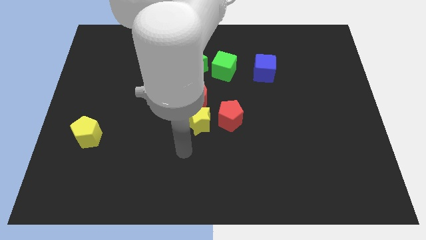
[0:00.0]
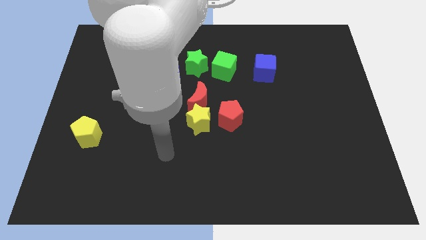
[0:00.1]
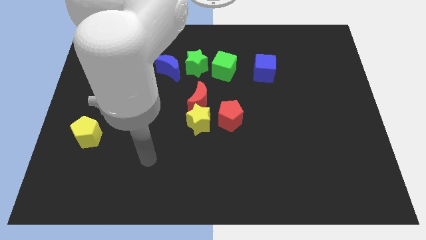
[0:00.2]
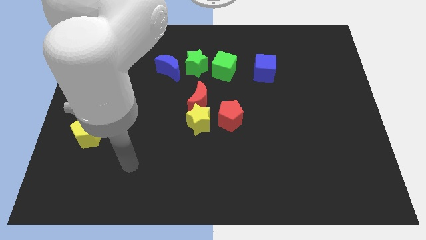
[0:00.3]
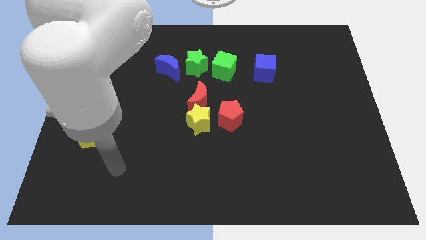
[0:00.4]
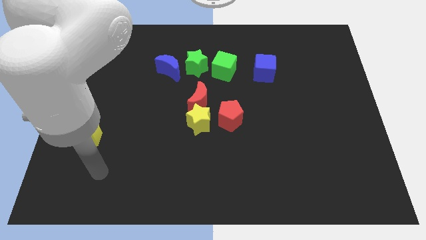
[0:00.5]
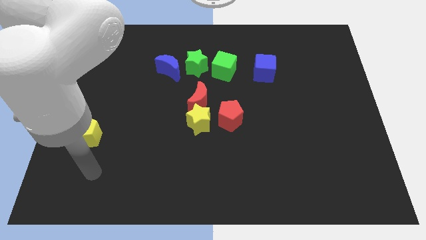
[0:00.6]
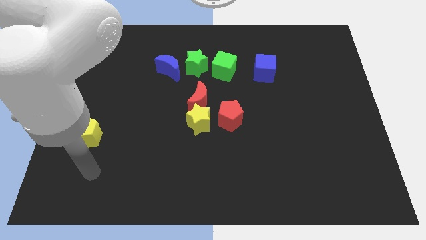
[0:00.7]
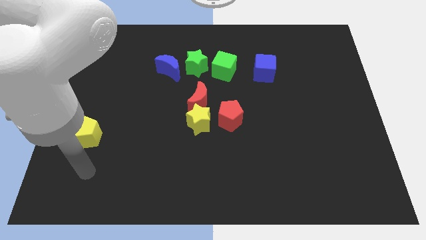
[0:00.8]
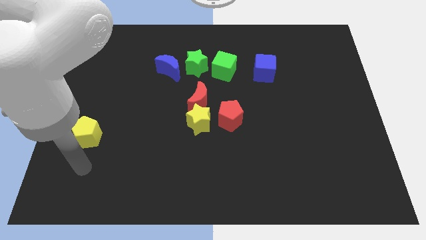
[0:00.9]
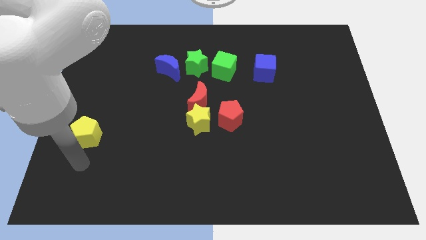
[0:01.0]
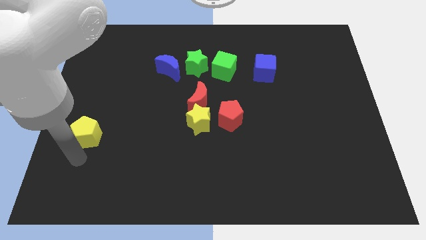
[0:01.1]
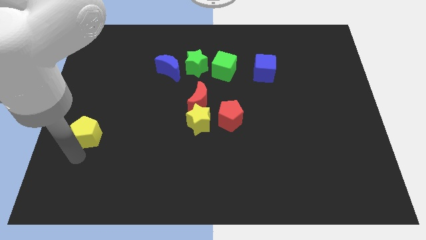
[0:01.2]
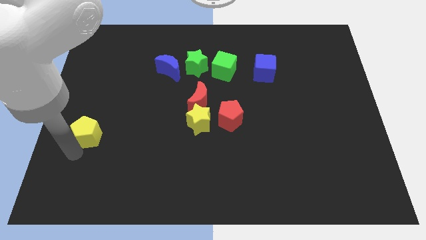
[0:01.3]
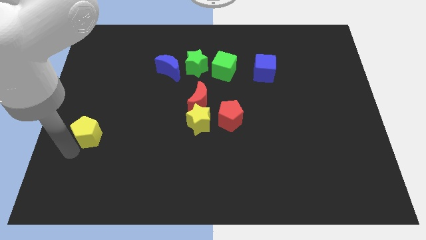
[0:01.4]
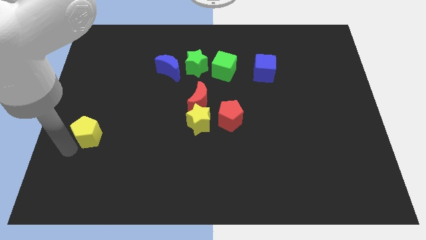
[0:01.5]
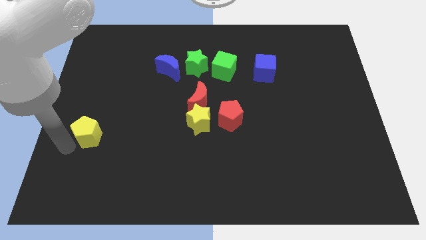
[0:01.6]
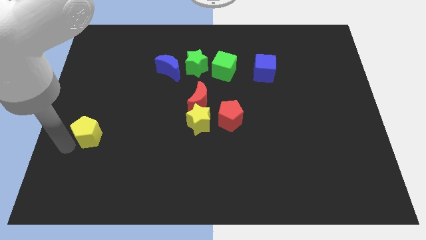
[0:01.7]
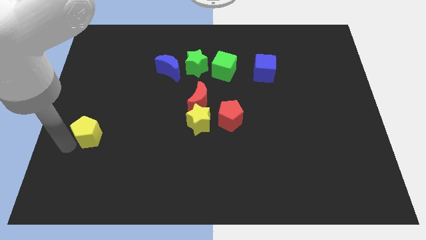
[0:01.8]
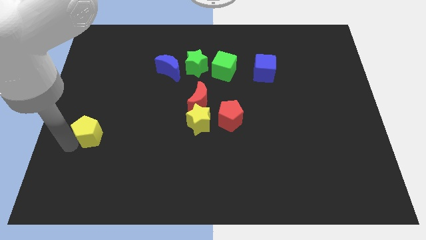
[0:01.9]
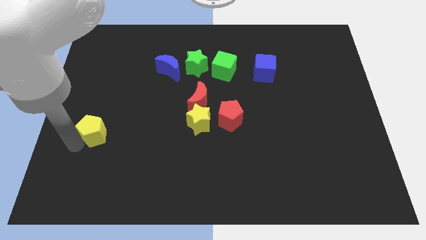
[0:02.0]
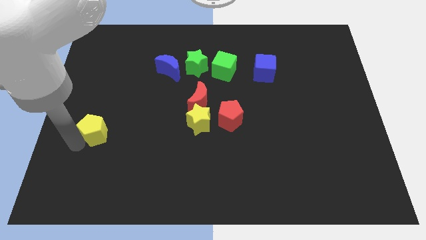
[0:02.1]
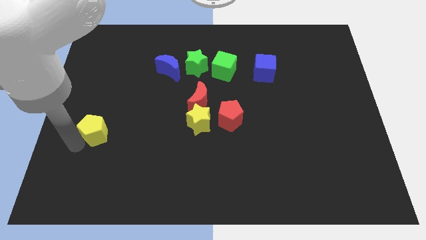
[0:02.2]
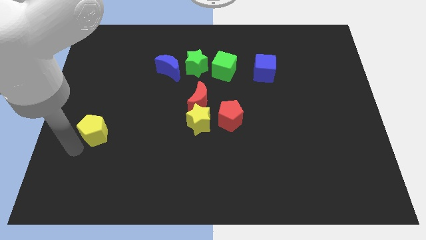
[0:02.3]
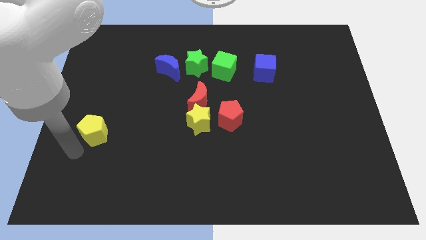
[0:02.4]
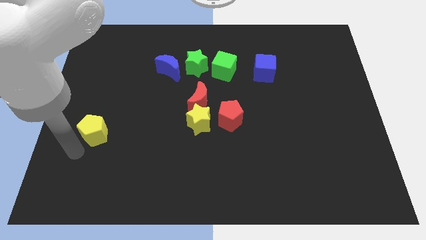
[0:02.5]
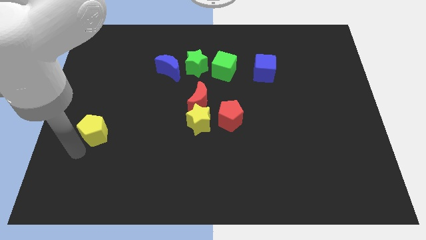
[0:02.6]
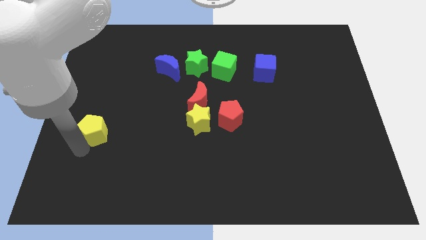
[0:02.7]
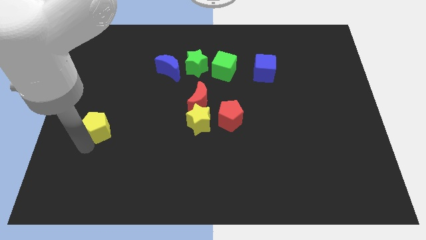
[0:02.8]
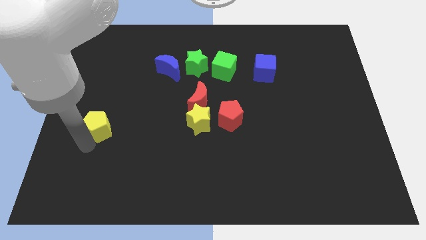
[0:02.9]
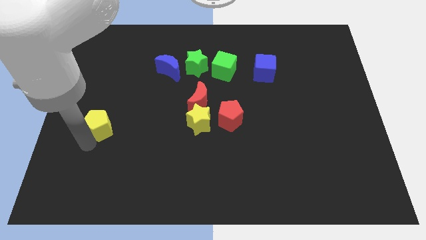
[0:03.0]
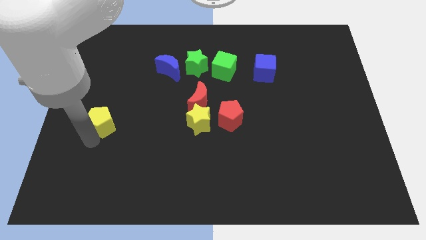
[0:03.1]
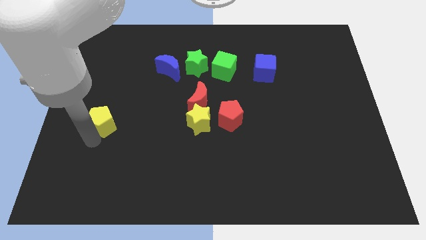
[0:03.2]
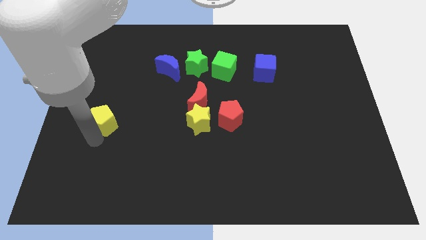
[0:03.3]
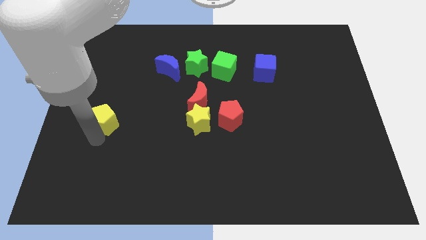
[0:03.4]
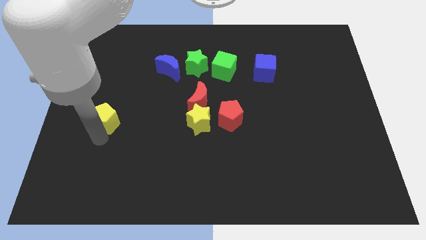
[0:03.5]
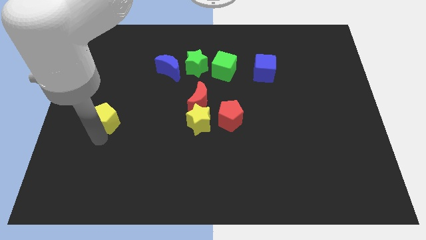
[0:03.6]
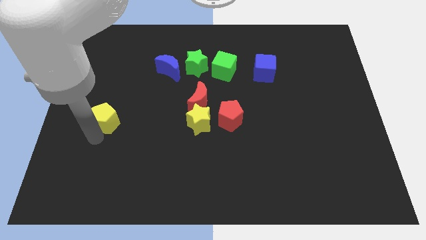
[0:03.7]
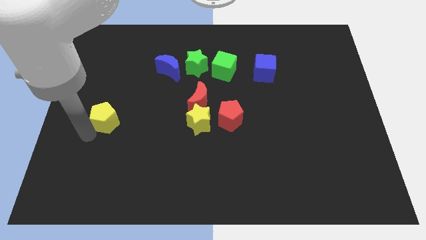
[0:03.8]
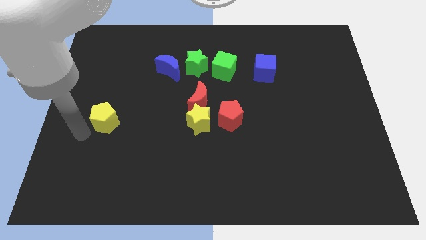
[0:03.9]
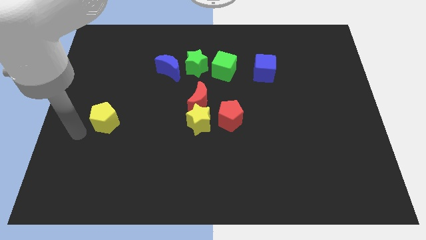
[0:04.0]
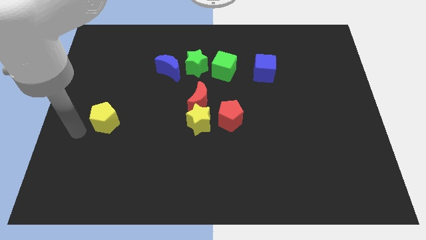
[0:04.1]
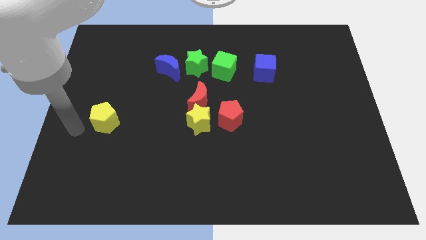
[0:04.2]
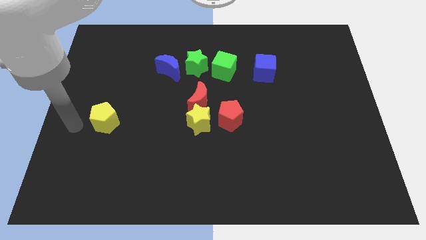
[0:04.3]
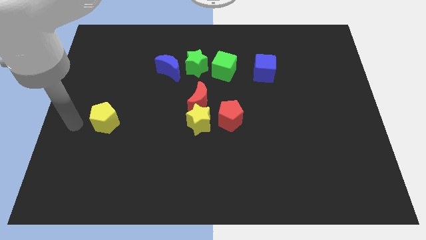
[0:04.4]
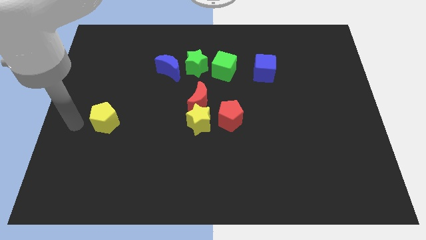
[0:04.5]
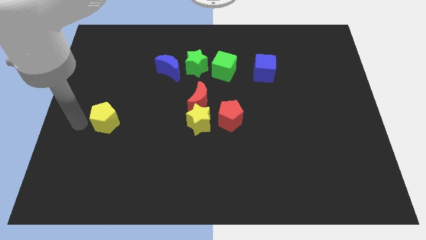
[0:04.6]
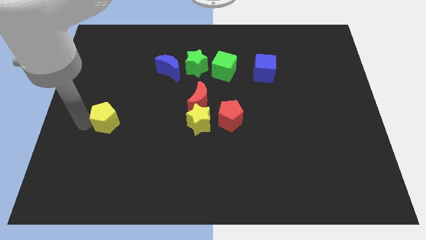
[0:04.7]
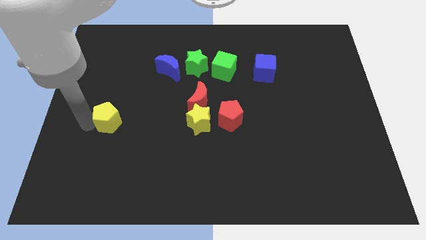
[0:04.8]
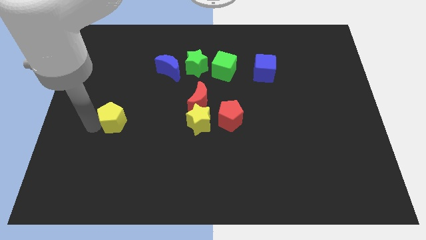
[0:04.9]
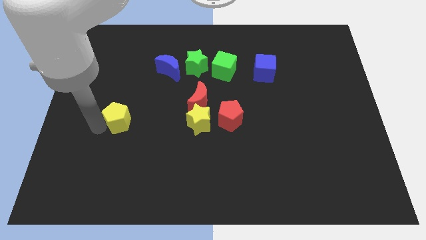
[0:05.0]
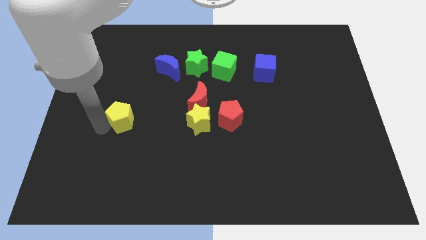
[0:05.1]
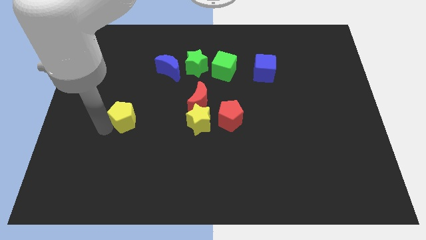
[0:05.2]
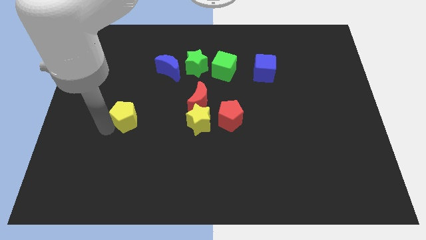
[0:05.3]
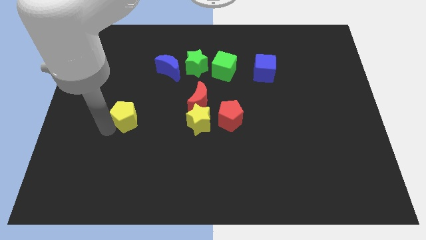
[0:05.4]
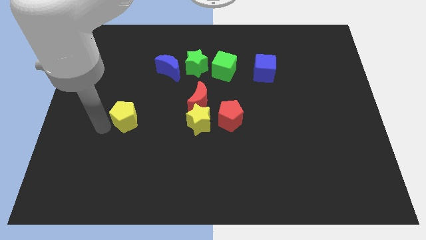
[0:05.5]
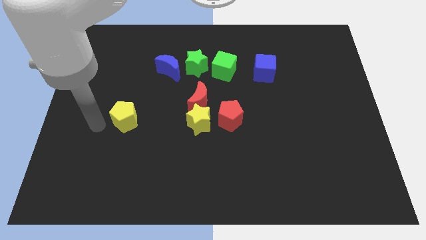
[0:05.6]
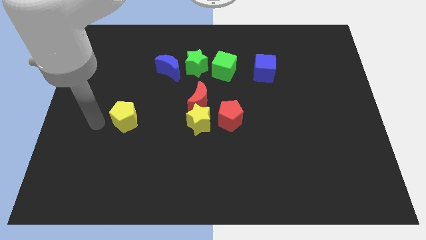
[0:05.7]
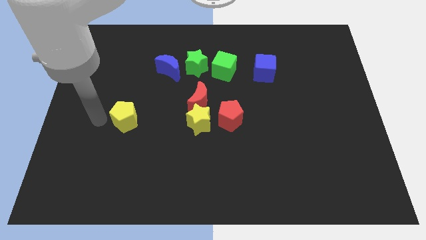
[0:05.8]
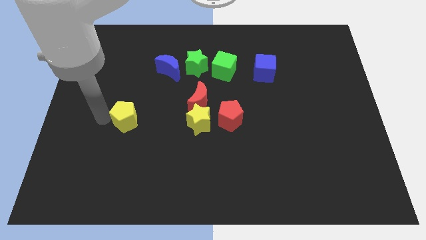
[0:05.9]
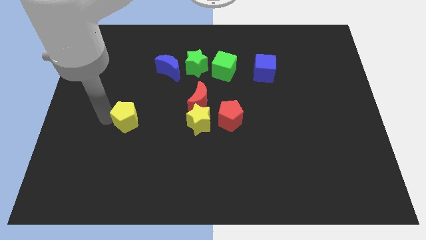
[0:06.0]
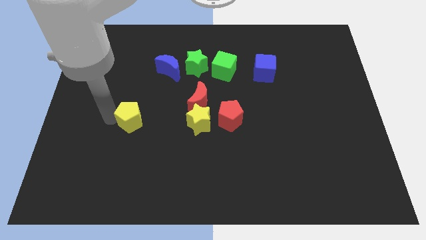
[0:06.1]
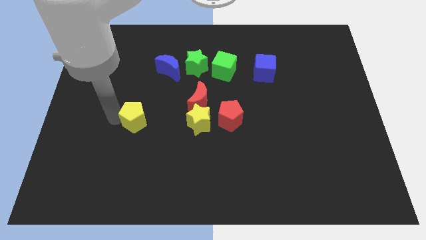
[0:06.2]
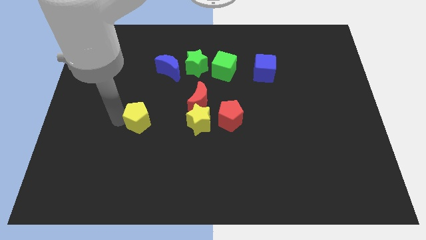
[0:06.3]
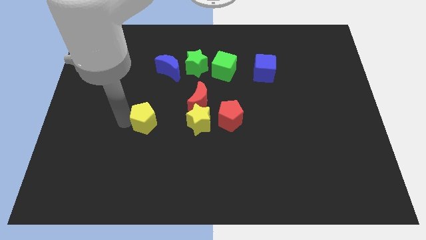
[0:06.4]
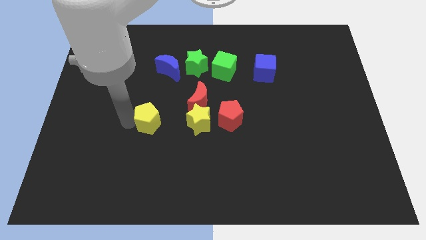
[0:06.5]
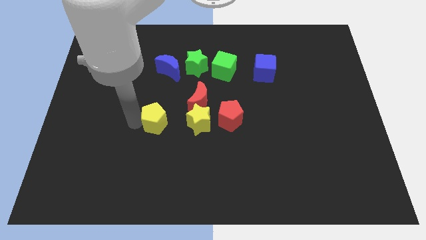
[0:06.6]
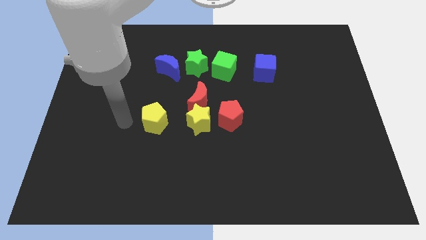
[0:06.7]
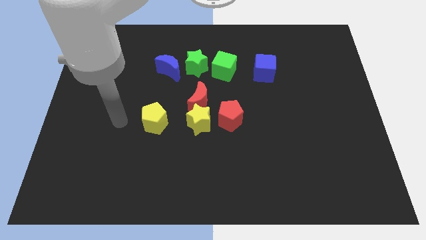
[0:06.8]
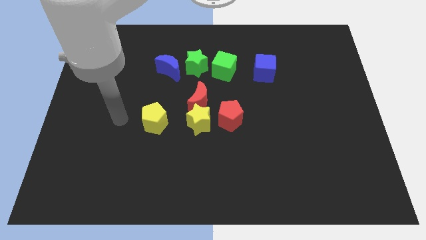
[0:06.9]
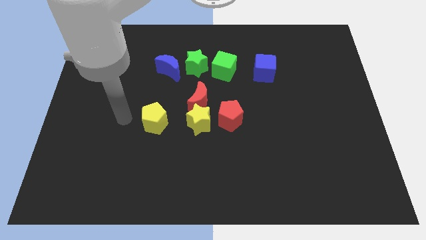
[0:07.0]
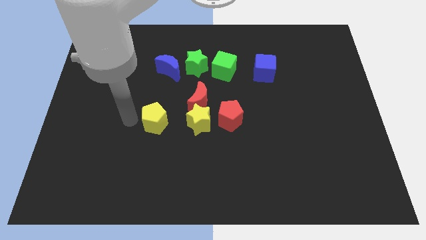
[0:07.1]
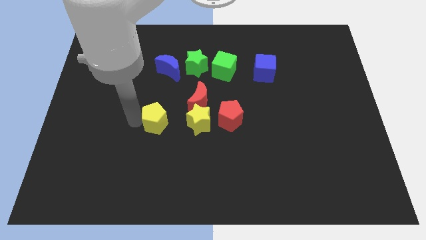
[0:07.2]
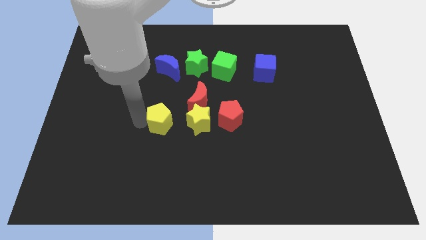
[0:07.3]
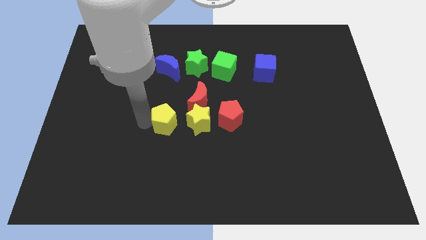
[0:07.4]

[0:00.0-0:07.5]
push the yellow pentagon to the left of the yellow star

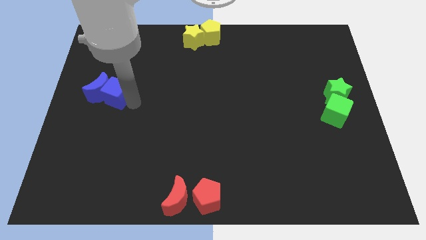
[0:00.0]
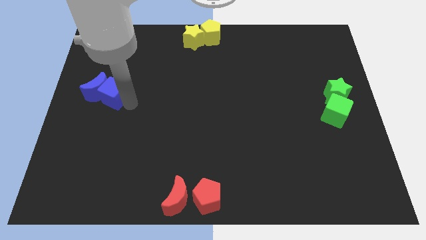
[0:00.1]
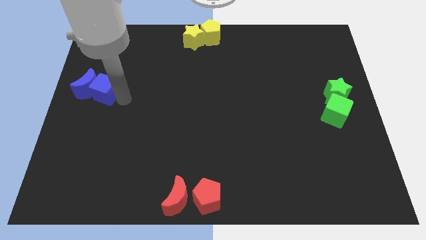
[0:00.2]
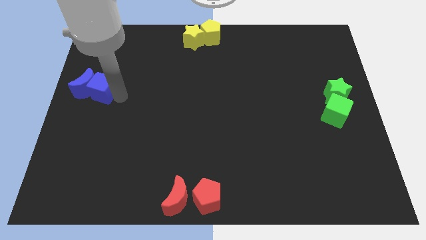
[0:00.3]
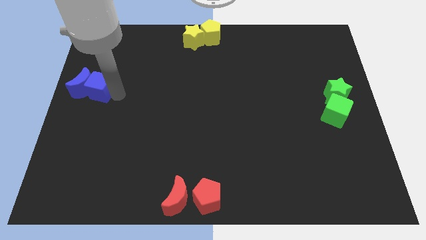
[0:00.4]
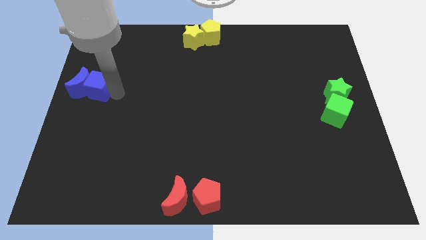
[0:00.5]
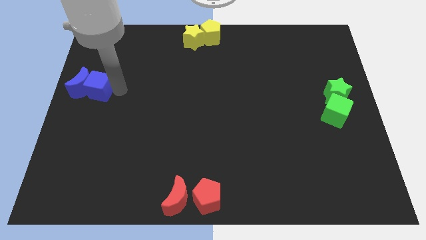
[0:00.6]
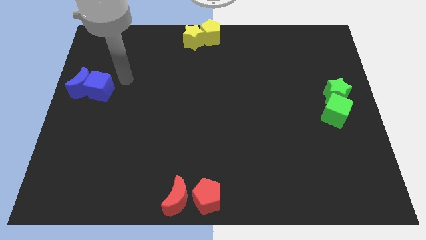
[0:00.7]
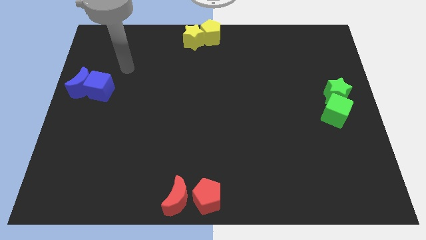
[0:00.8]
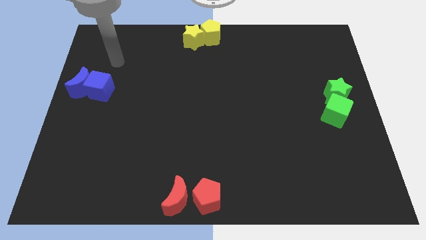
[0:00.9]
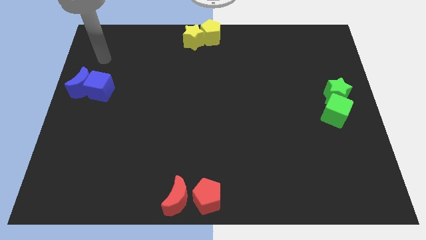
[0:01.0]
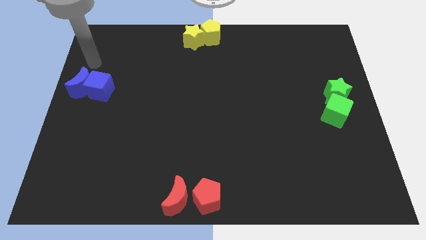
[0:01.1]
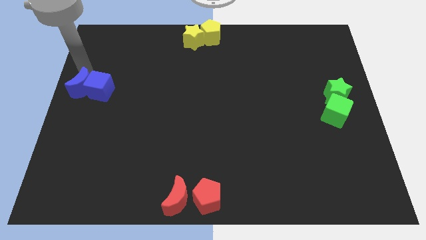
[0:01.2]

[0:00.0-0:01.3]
push the blue cube into the blue crescent

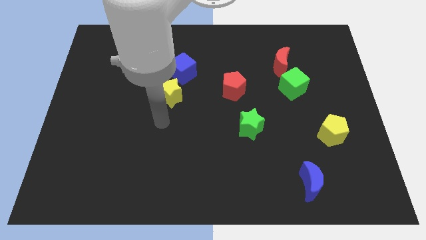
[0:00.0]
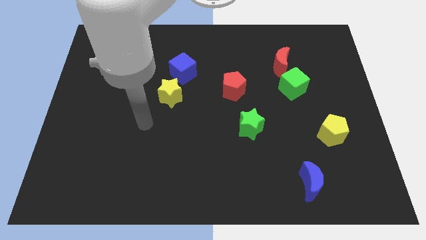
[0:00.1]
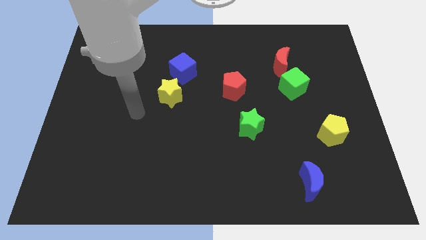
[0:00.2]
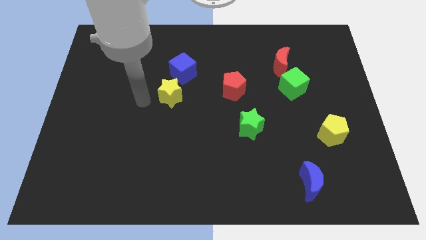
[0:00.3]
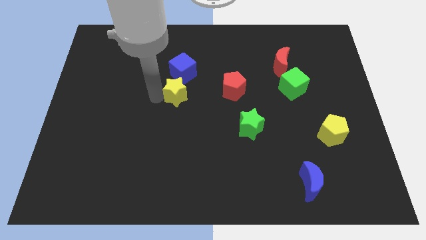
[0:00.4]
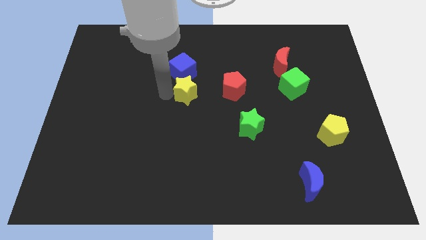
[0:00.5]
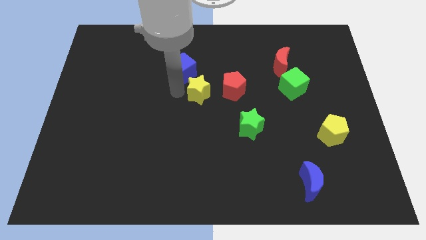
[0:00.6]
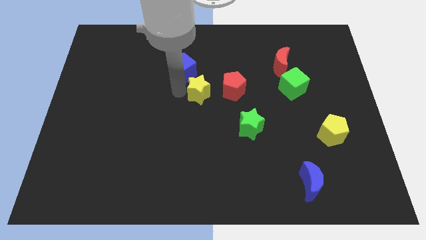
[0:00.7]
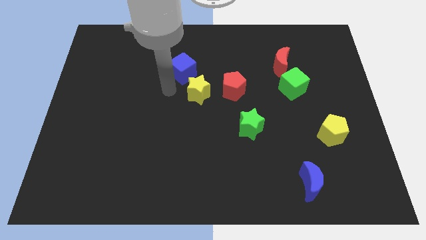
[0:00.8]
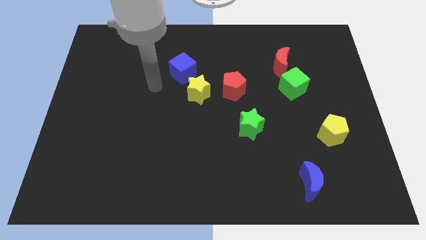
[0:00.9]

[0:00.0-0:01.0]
move the yellow star to the bottom right of the blue cube
